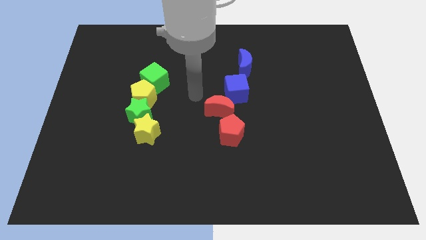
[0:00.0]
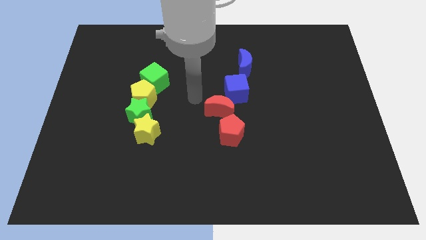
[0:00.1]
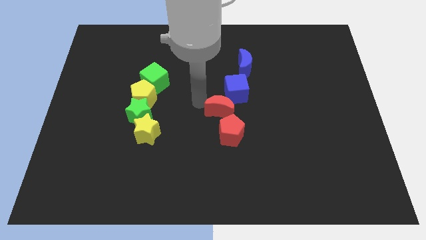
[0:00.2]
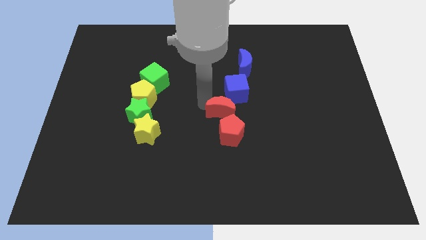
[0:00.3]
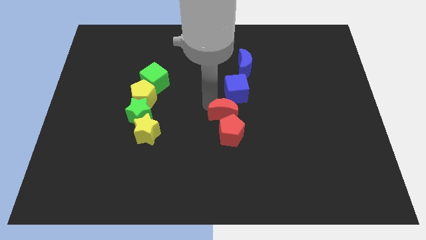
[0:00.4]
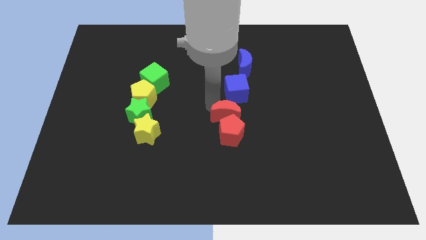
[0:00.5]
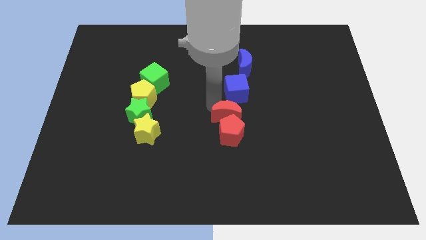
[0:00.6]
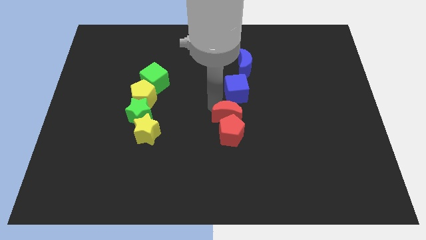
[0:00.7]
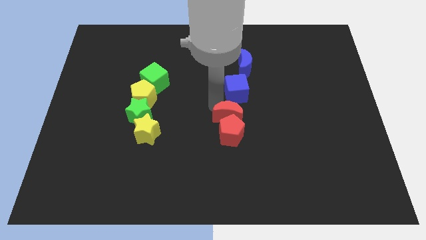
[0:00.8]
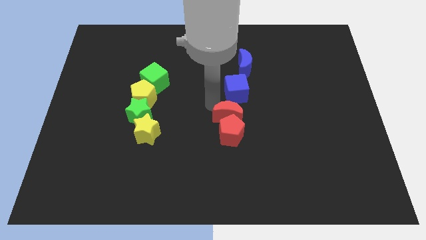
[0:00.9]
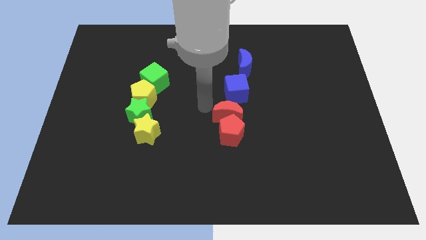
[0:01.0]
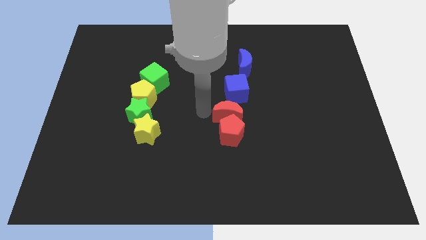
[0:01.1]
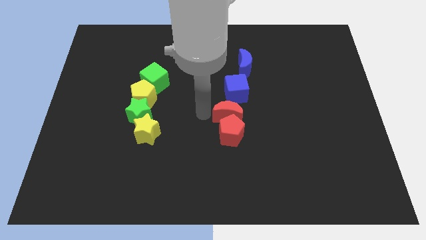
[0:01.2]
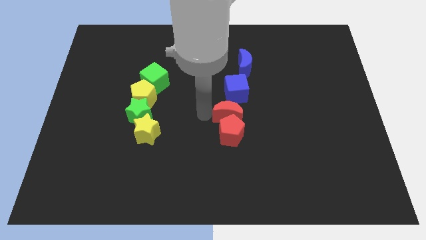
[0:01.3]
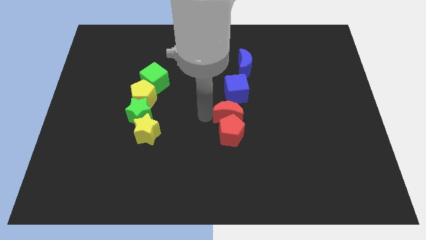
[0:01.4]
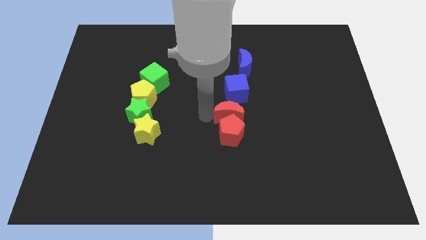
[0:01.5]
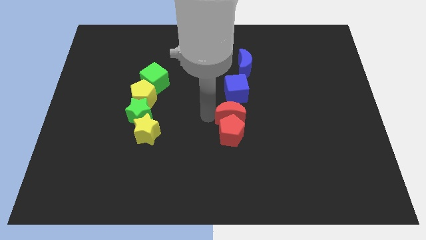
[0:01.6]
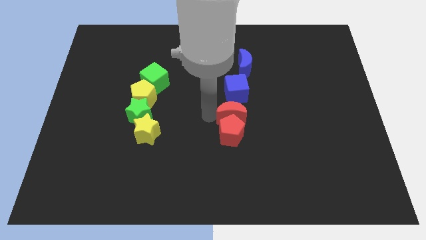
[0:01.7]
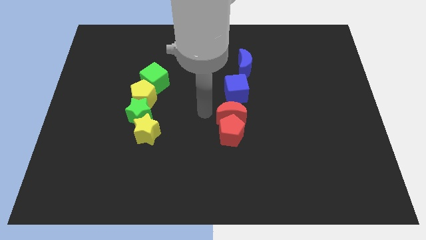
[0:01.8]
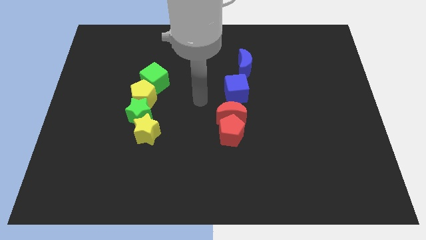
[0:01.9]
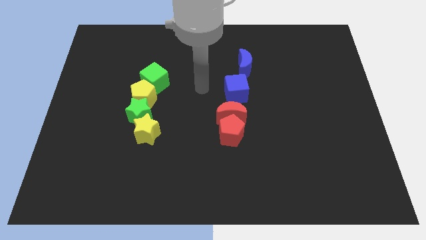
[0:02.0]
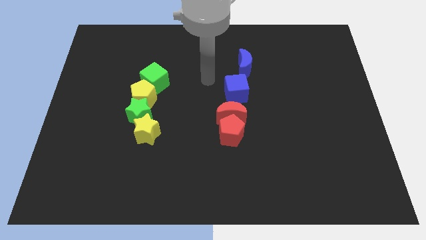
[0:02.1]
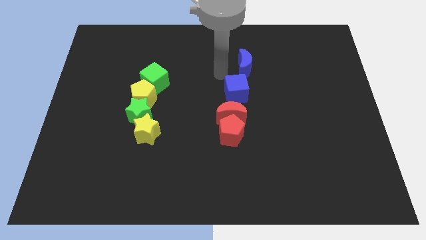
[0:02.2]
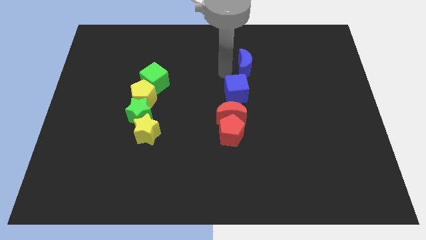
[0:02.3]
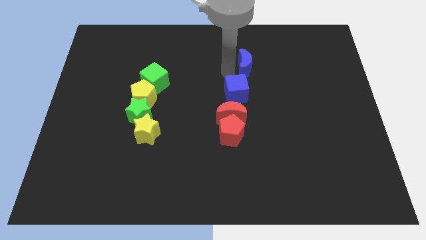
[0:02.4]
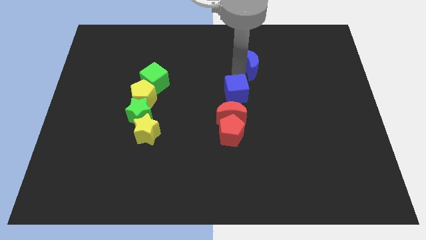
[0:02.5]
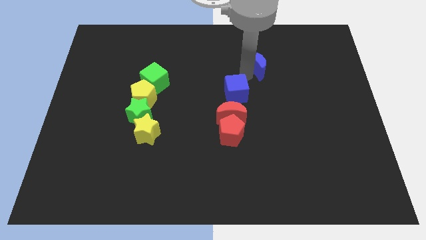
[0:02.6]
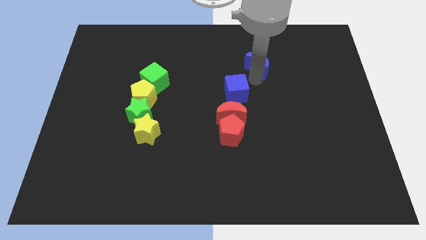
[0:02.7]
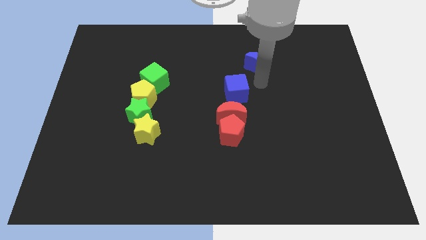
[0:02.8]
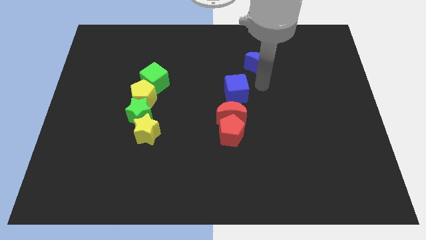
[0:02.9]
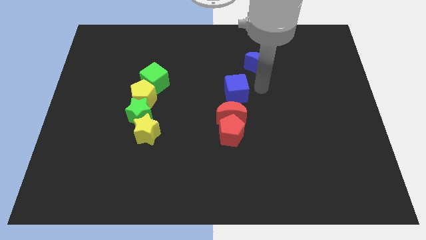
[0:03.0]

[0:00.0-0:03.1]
place red moon on top of red pentagon

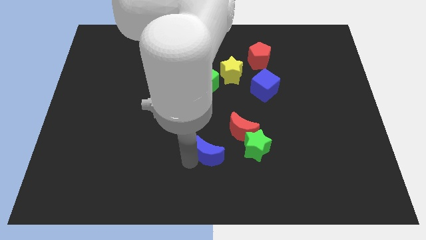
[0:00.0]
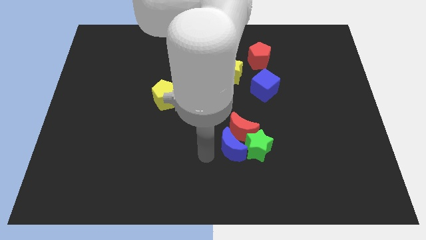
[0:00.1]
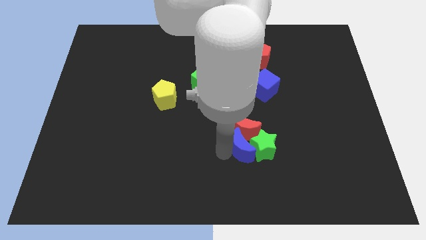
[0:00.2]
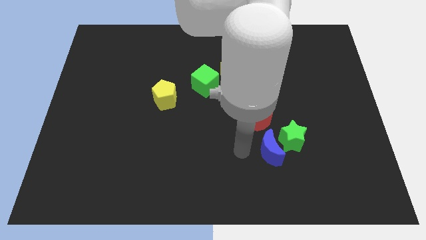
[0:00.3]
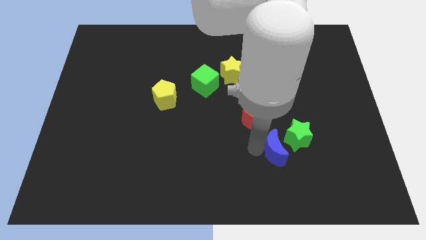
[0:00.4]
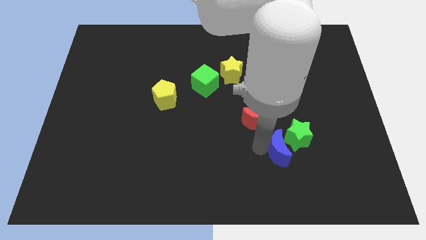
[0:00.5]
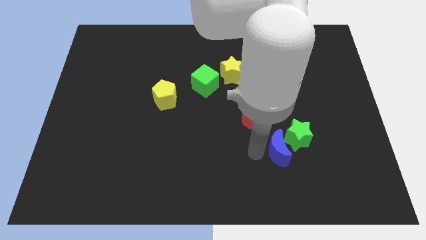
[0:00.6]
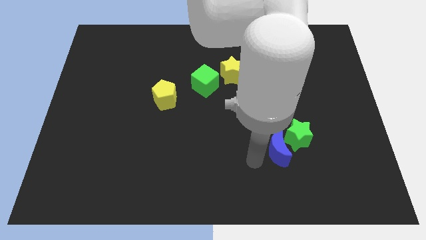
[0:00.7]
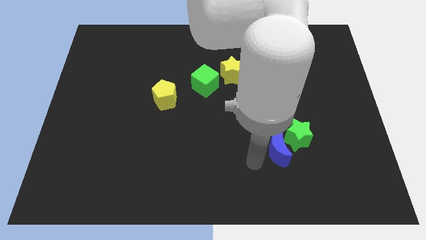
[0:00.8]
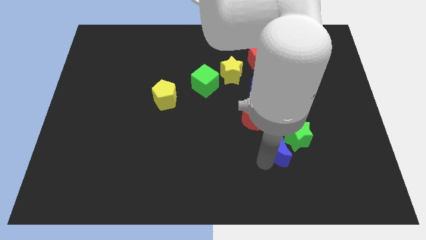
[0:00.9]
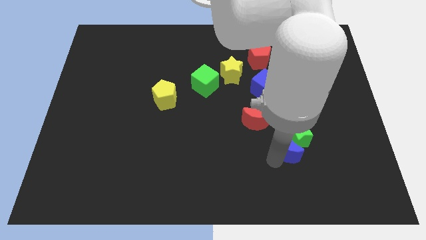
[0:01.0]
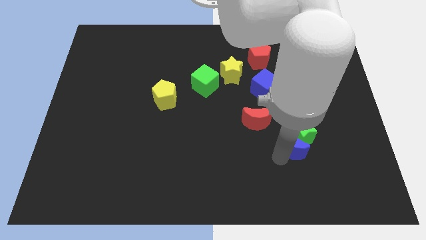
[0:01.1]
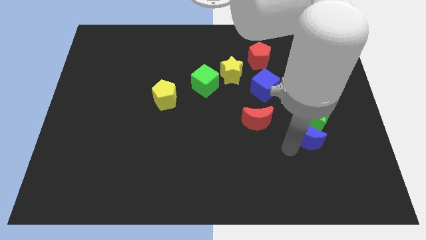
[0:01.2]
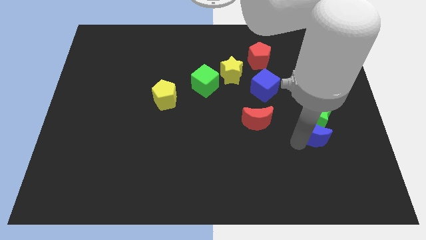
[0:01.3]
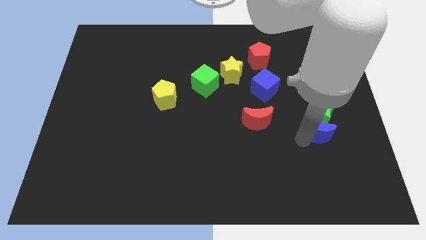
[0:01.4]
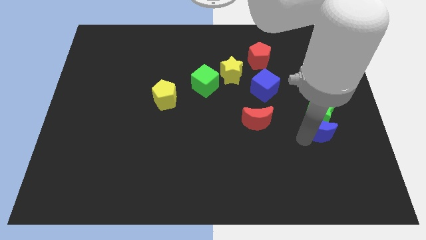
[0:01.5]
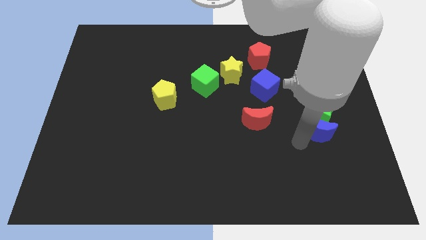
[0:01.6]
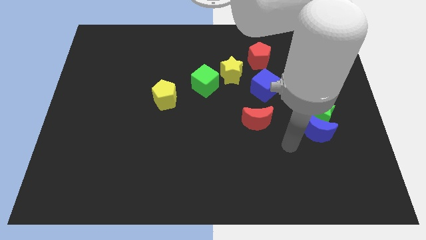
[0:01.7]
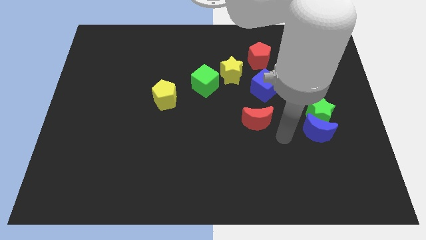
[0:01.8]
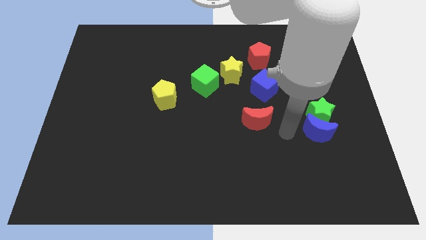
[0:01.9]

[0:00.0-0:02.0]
put the green star along with the blue moon right to the red moon

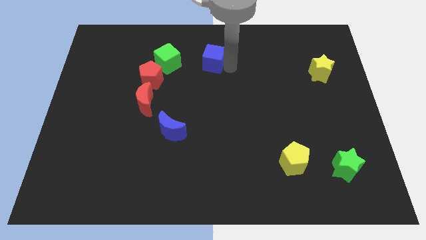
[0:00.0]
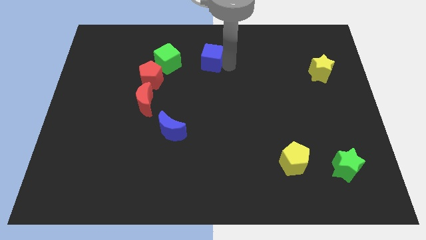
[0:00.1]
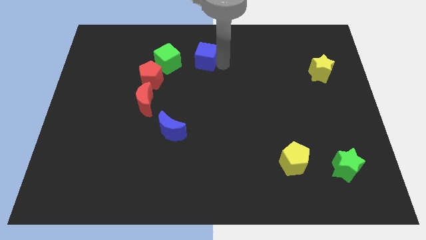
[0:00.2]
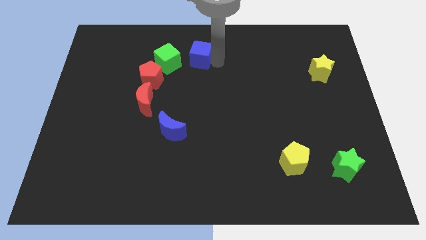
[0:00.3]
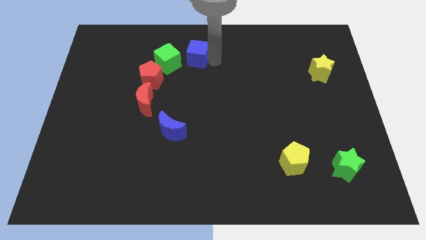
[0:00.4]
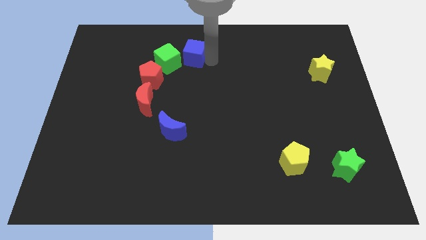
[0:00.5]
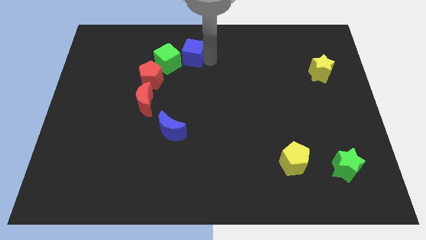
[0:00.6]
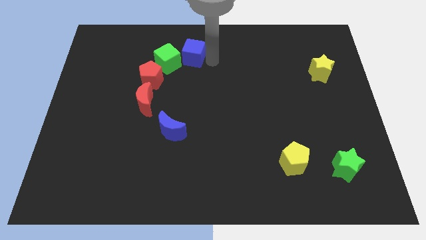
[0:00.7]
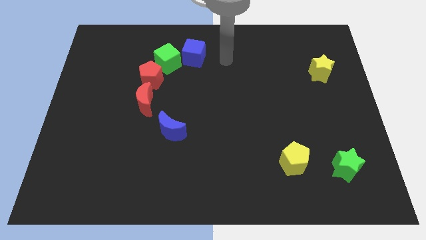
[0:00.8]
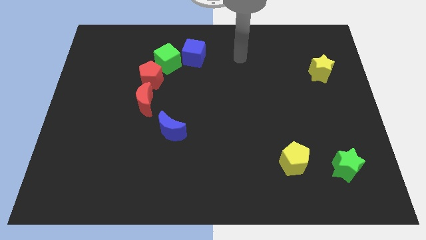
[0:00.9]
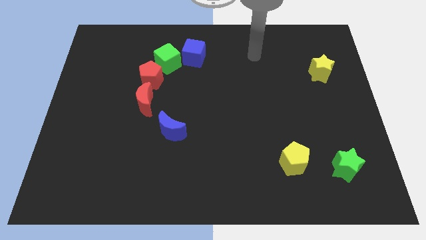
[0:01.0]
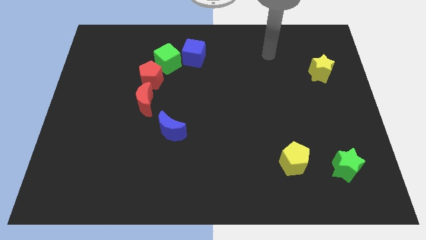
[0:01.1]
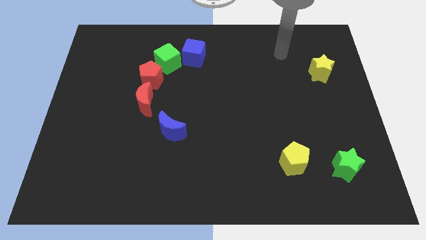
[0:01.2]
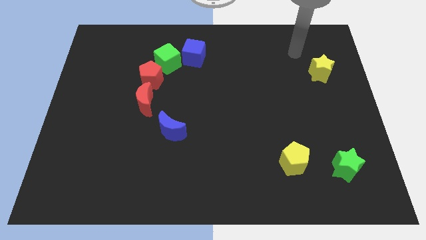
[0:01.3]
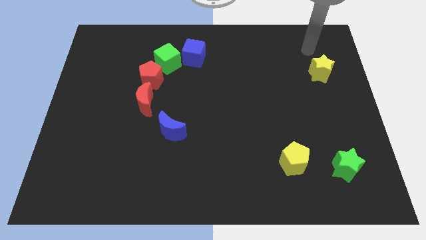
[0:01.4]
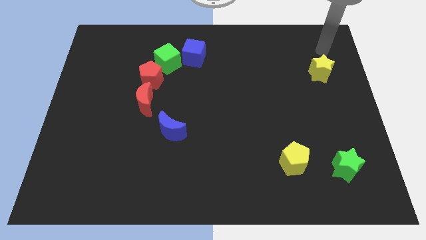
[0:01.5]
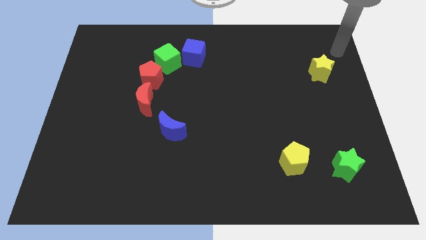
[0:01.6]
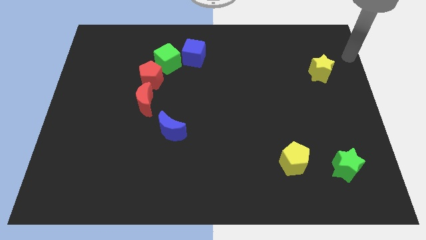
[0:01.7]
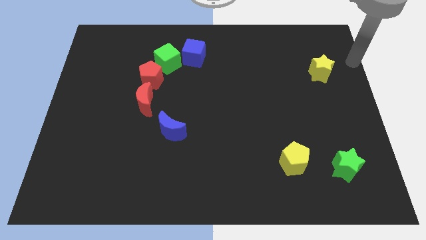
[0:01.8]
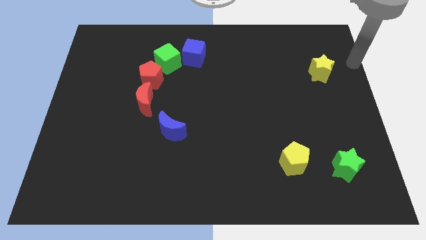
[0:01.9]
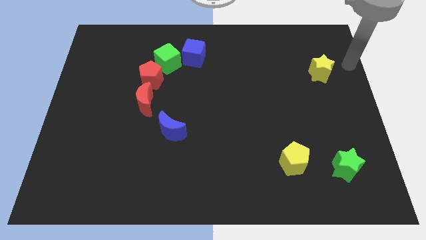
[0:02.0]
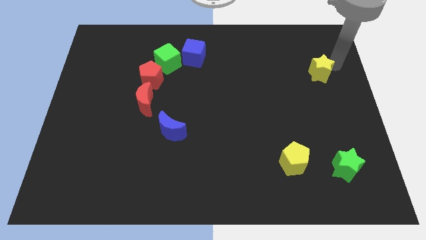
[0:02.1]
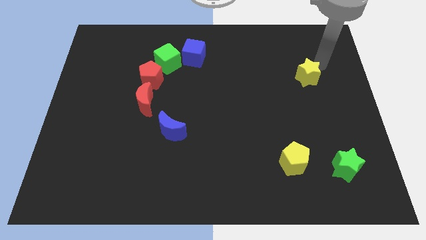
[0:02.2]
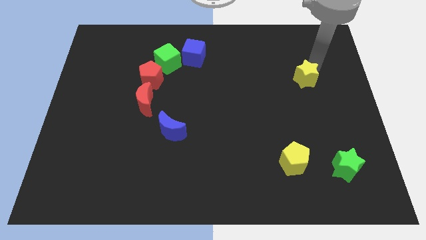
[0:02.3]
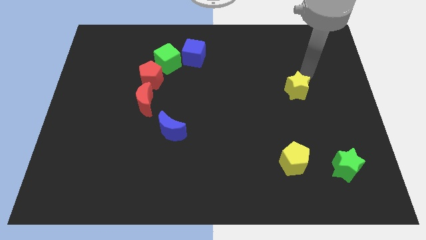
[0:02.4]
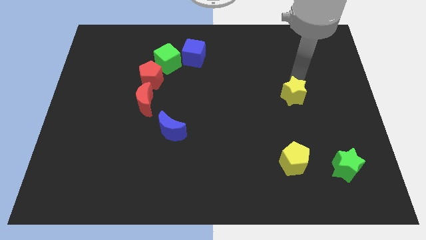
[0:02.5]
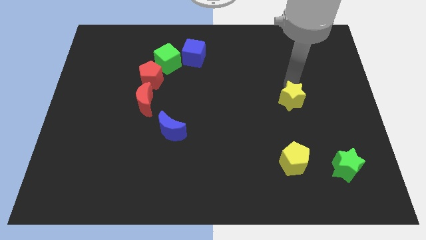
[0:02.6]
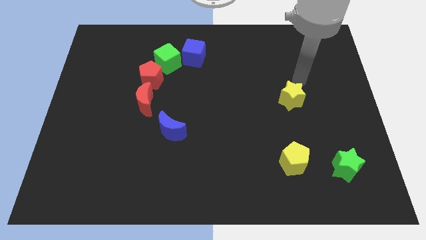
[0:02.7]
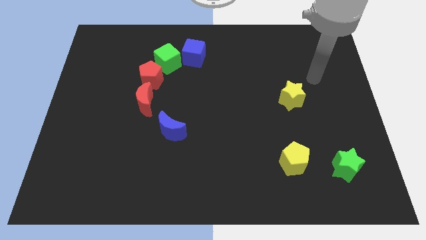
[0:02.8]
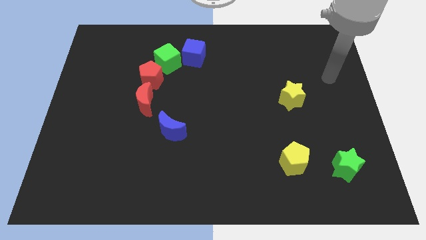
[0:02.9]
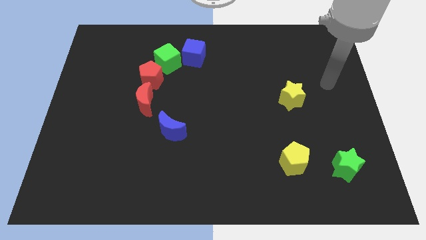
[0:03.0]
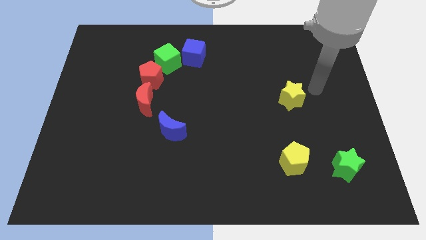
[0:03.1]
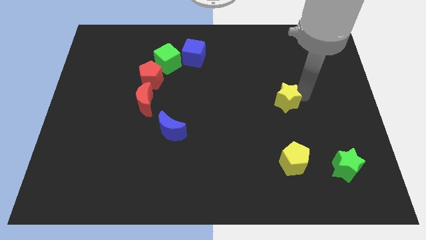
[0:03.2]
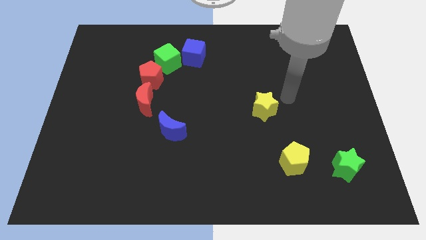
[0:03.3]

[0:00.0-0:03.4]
push yellow star above yellow pentagon

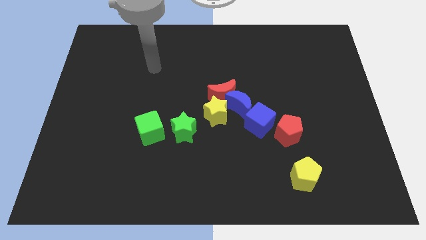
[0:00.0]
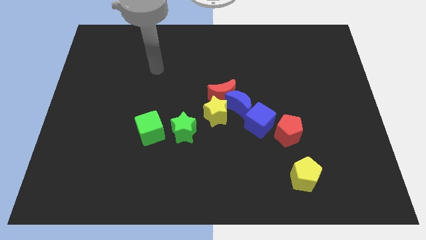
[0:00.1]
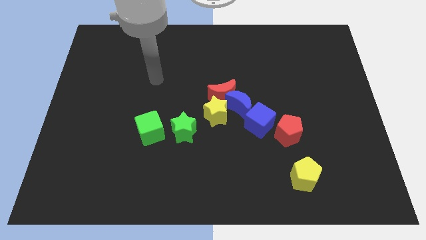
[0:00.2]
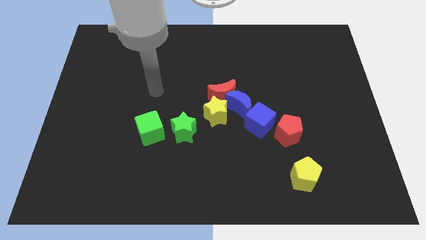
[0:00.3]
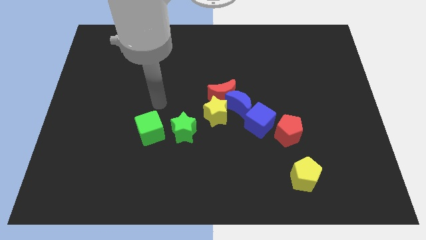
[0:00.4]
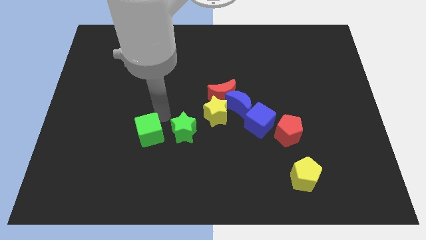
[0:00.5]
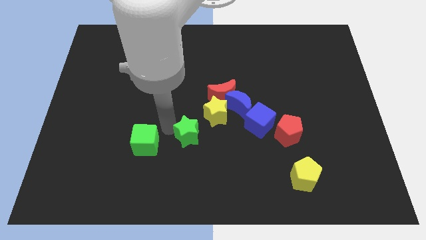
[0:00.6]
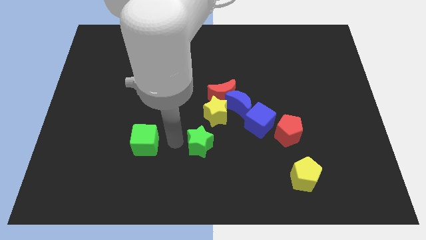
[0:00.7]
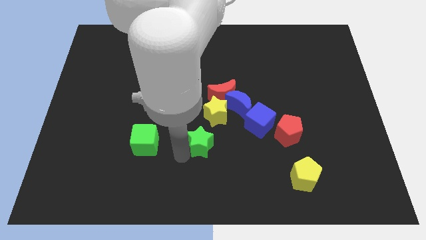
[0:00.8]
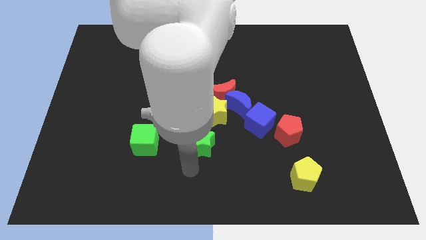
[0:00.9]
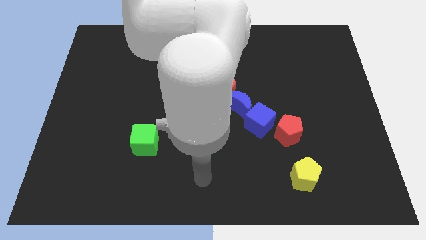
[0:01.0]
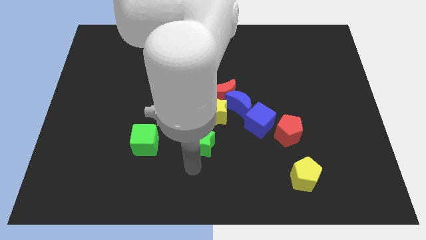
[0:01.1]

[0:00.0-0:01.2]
separate the green blocks
